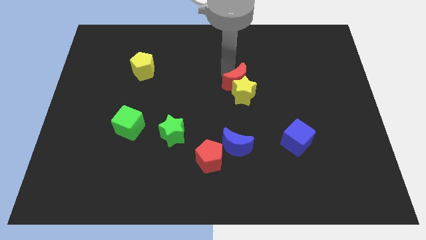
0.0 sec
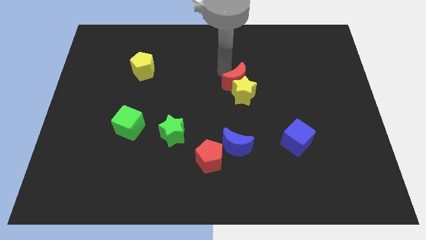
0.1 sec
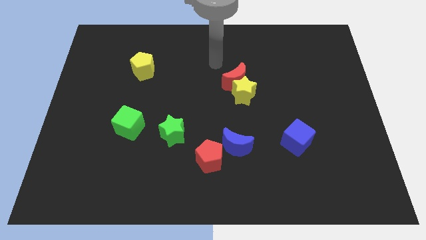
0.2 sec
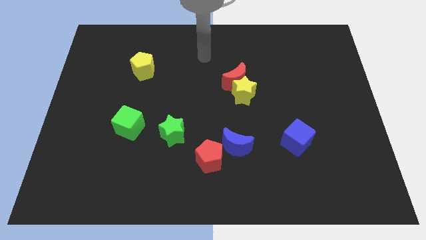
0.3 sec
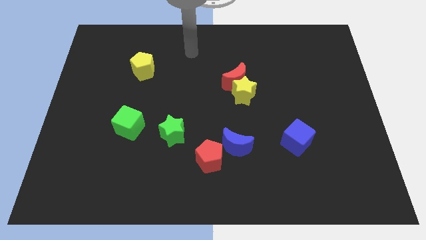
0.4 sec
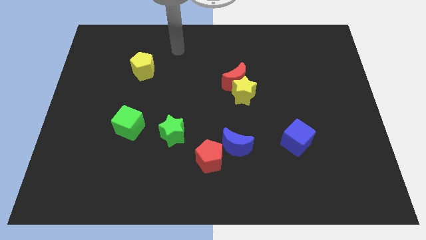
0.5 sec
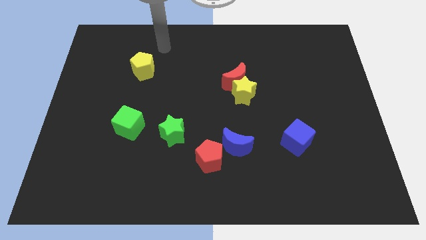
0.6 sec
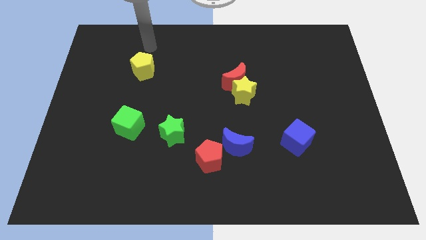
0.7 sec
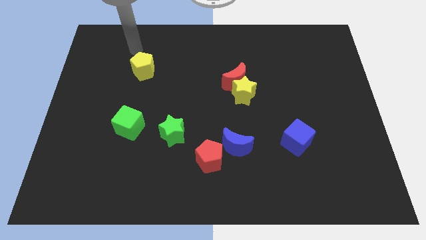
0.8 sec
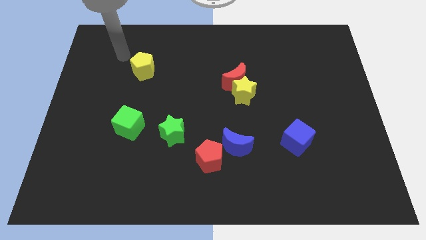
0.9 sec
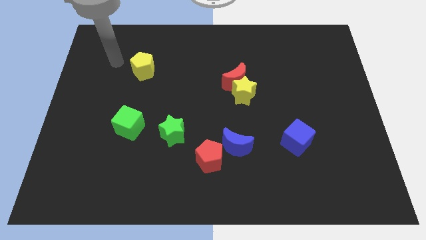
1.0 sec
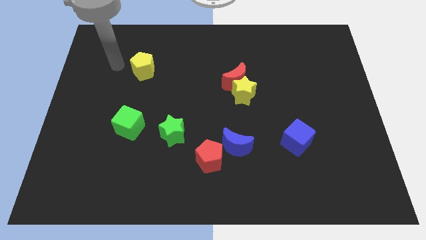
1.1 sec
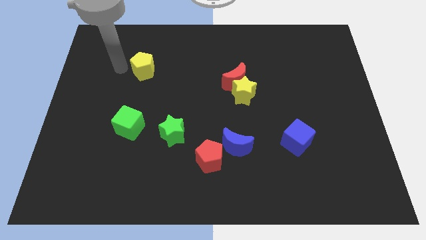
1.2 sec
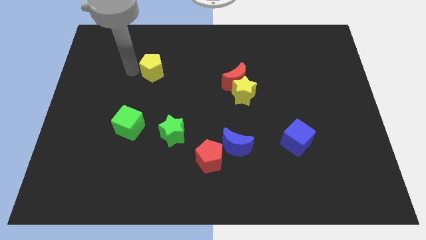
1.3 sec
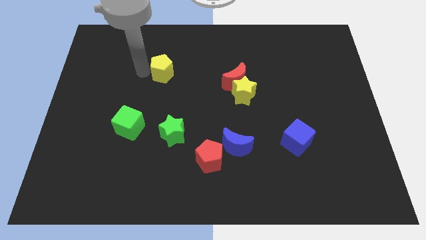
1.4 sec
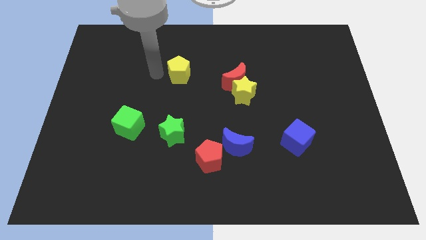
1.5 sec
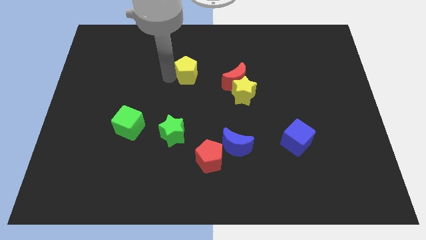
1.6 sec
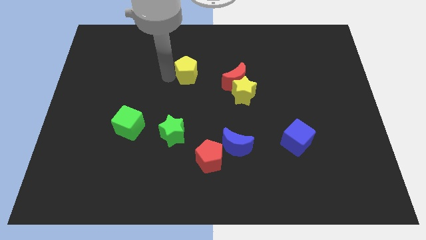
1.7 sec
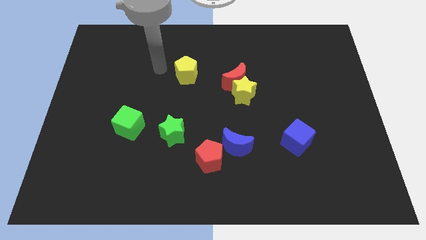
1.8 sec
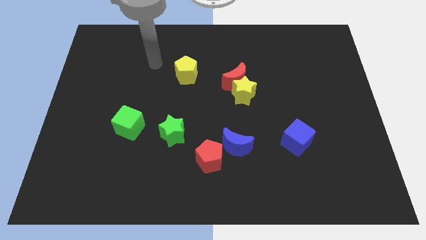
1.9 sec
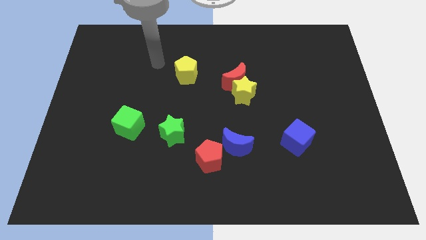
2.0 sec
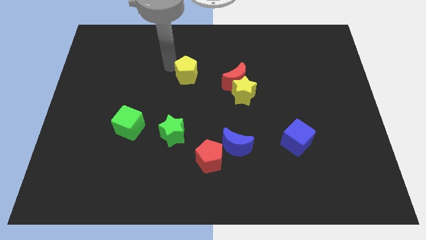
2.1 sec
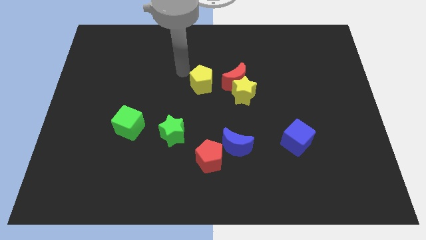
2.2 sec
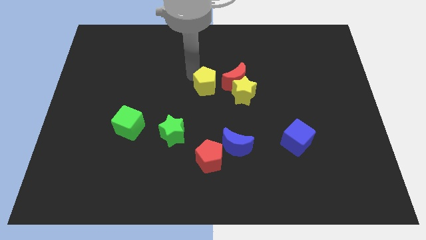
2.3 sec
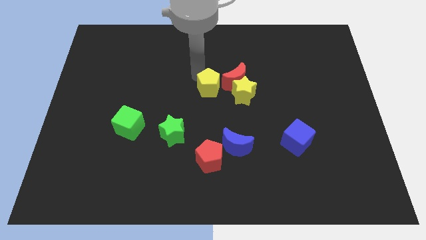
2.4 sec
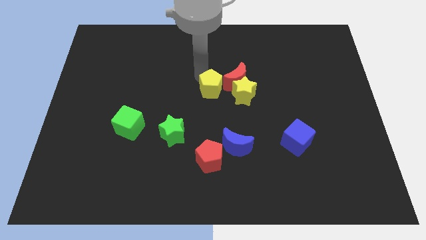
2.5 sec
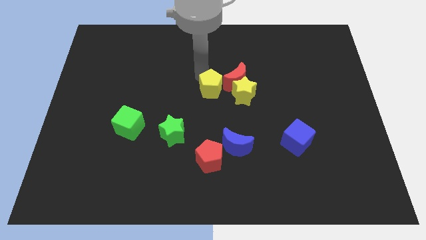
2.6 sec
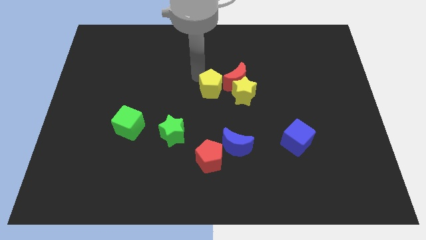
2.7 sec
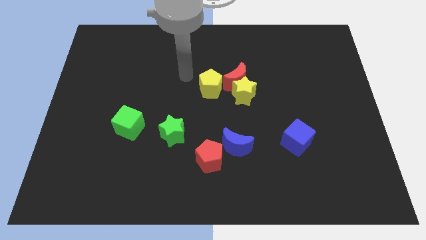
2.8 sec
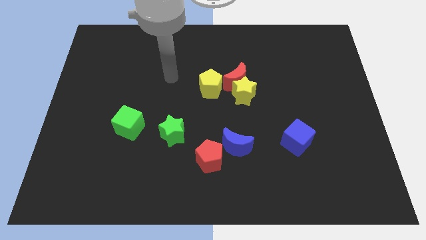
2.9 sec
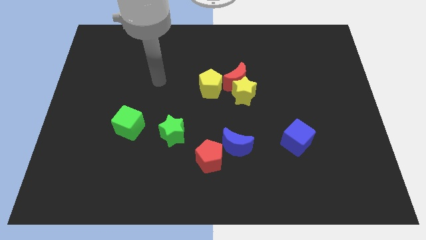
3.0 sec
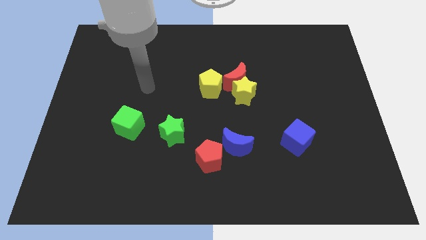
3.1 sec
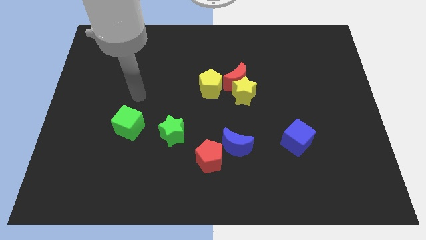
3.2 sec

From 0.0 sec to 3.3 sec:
move the yellow pentagon to the left side of the yellow star

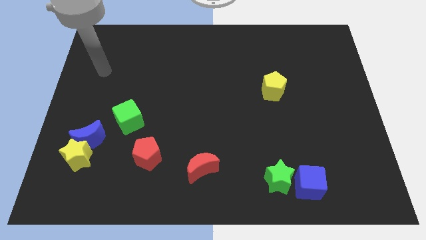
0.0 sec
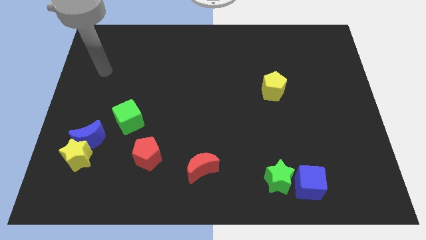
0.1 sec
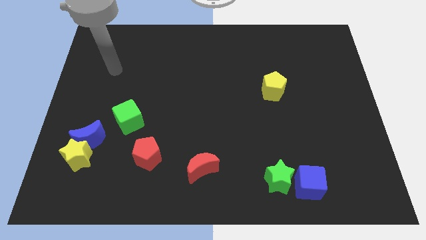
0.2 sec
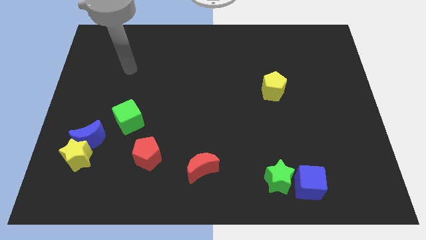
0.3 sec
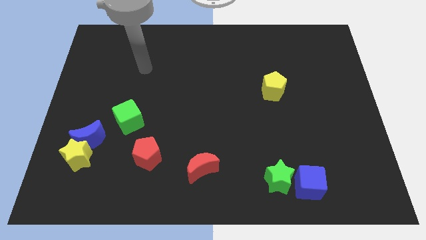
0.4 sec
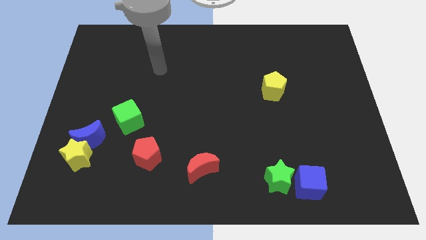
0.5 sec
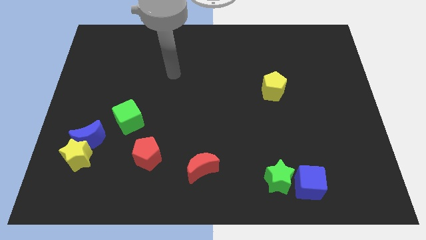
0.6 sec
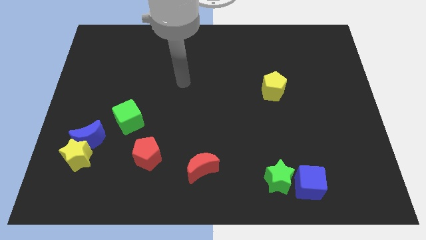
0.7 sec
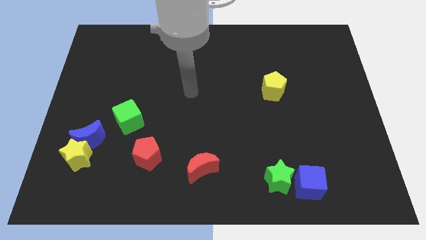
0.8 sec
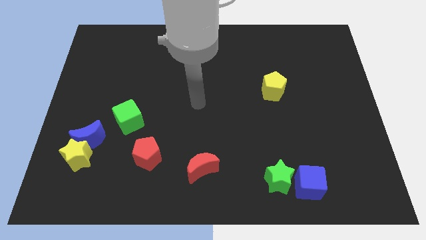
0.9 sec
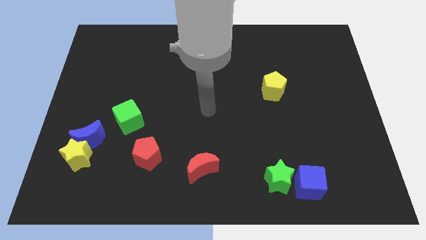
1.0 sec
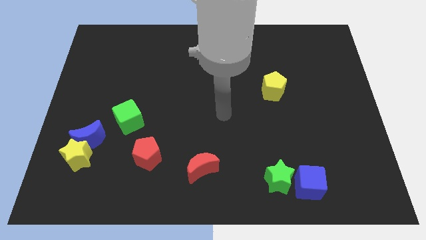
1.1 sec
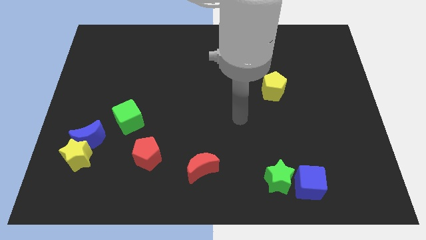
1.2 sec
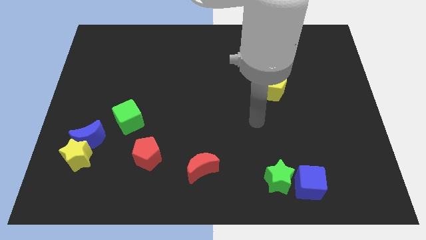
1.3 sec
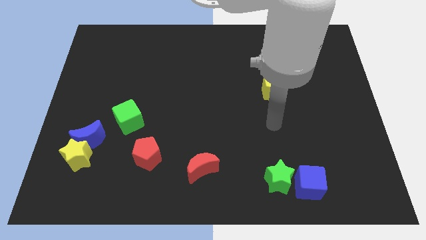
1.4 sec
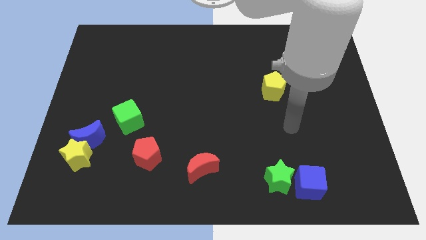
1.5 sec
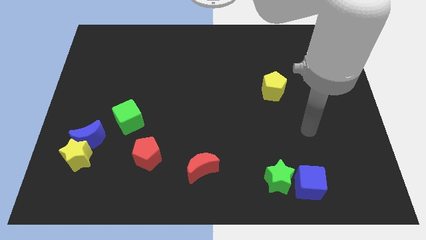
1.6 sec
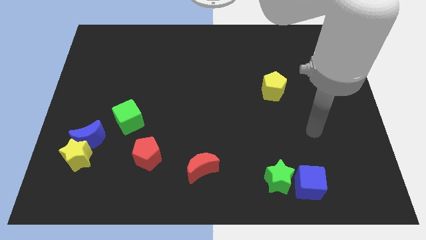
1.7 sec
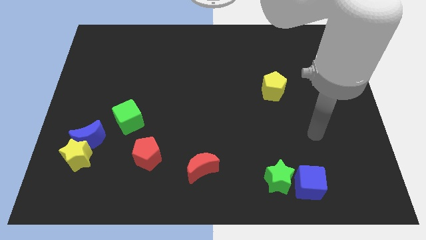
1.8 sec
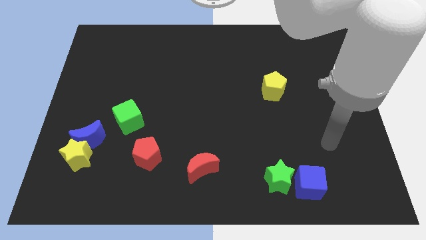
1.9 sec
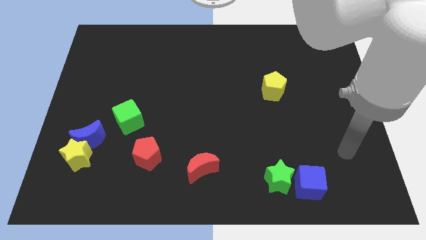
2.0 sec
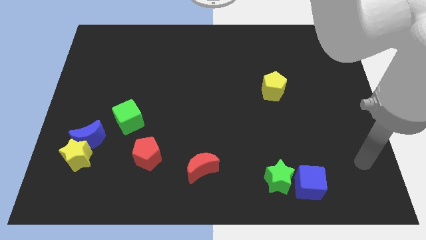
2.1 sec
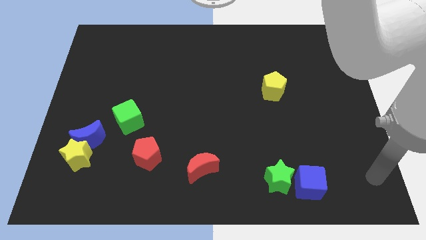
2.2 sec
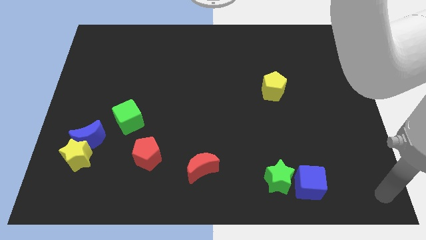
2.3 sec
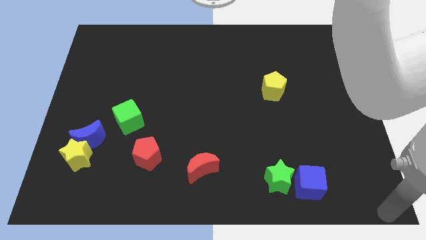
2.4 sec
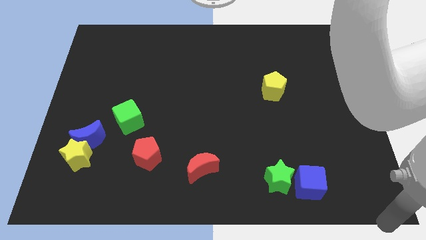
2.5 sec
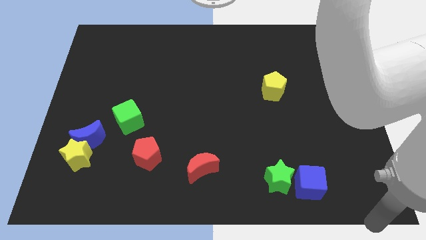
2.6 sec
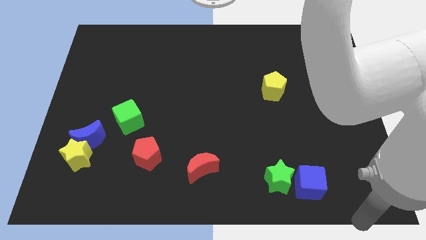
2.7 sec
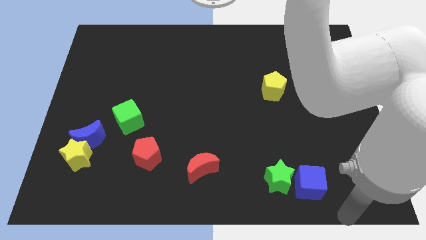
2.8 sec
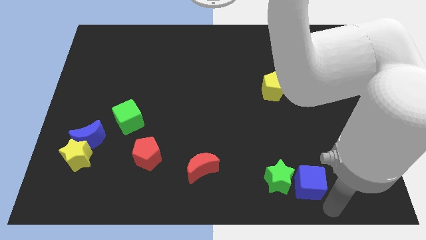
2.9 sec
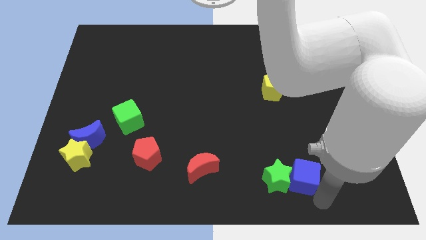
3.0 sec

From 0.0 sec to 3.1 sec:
touch the bottom right side of the blue cube

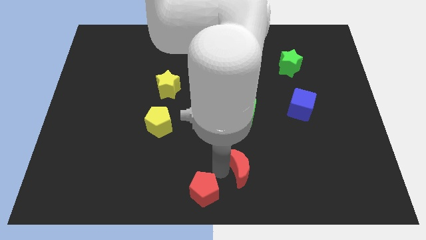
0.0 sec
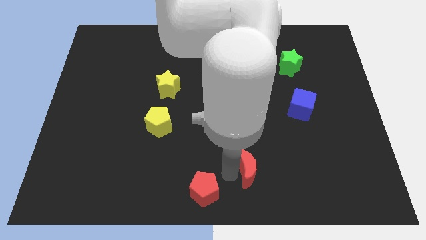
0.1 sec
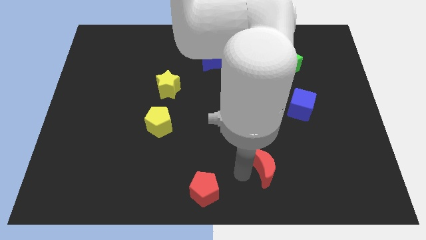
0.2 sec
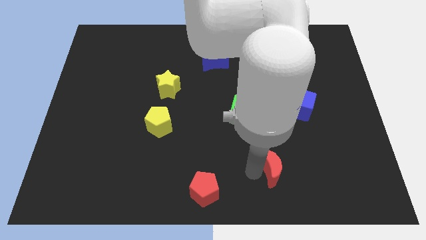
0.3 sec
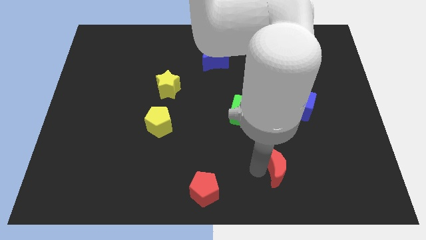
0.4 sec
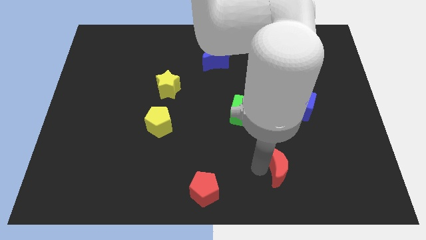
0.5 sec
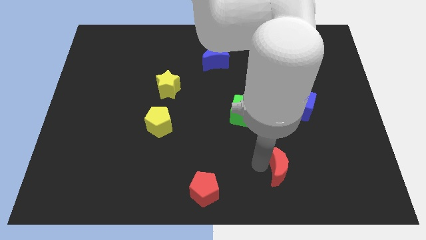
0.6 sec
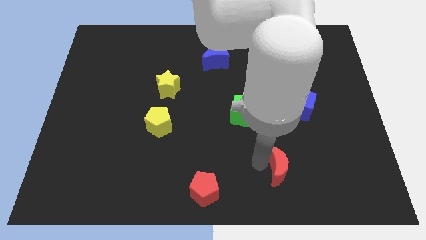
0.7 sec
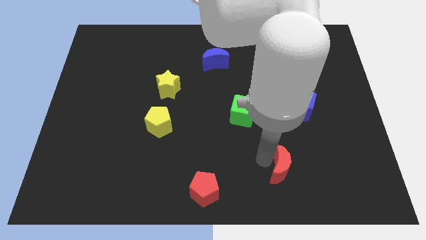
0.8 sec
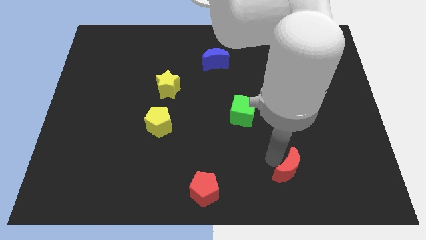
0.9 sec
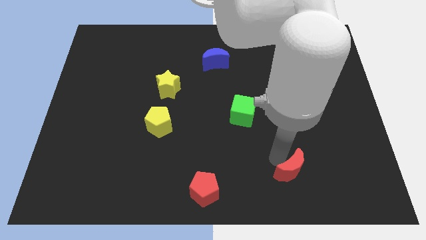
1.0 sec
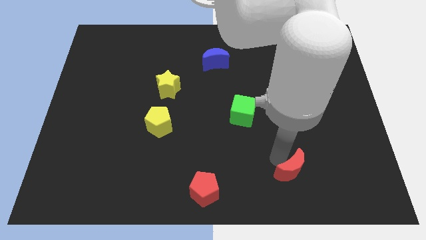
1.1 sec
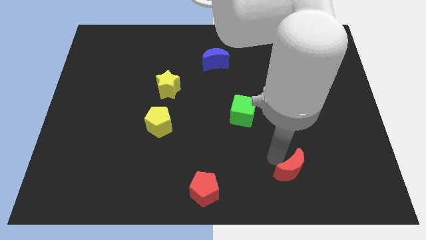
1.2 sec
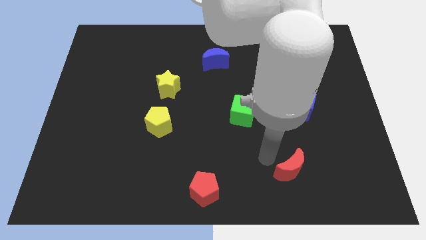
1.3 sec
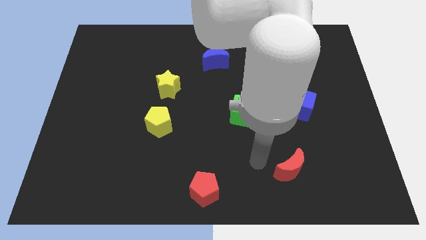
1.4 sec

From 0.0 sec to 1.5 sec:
place red crescent below blue cube

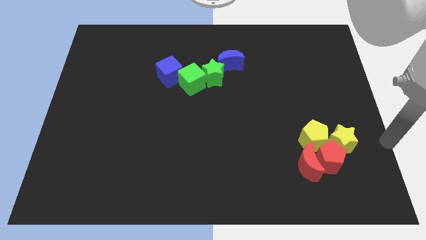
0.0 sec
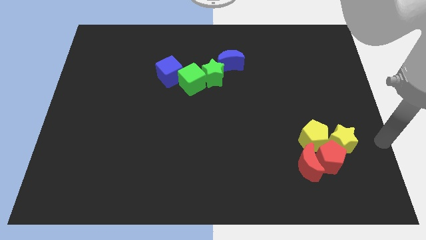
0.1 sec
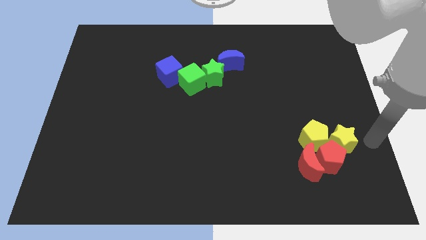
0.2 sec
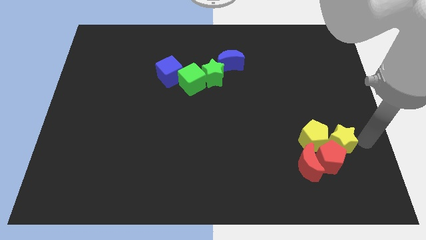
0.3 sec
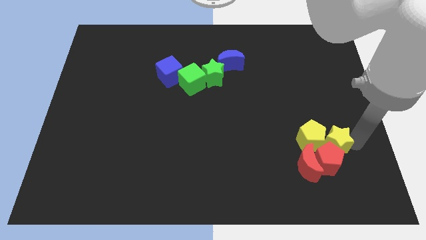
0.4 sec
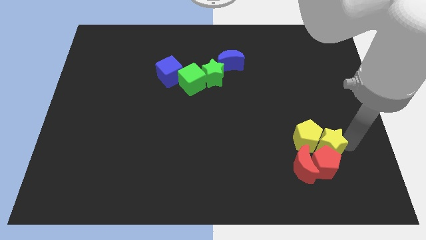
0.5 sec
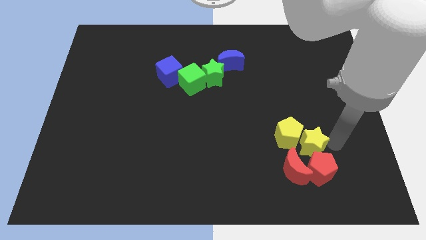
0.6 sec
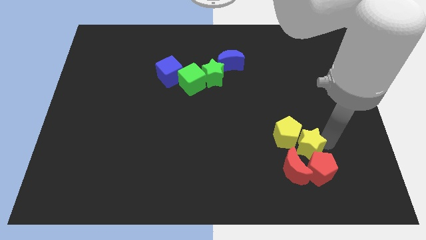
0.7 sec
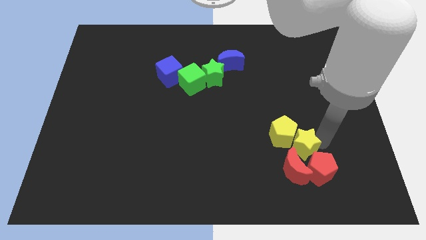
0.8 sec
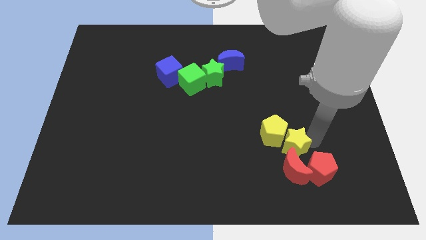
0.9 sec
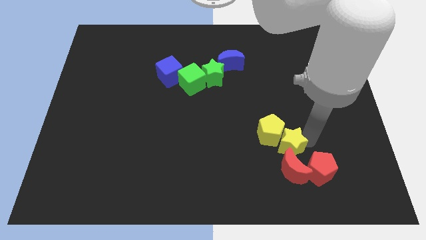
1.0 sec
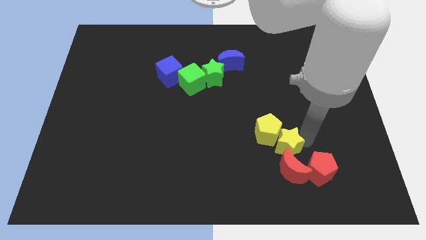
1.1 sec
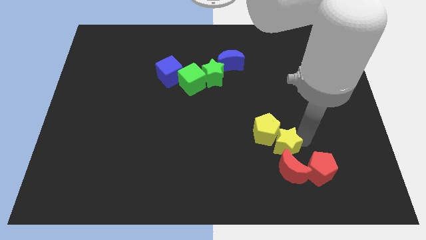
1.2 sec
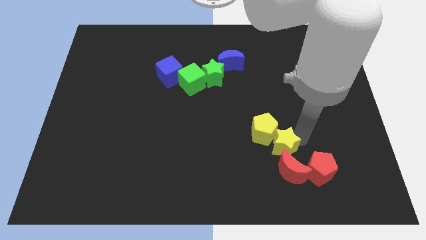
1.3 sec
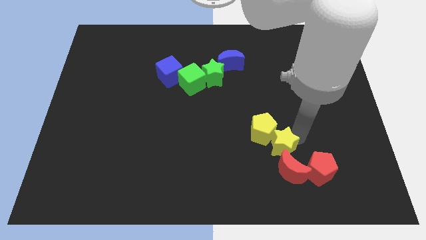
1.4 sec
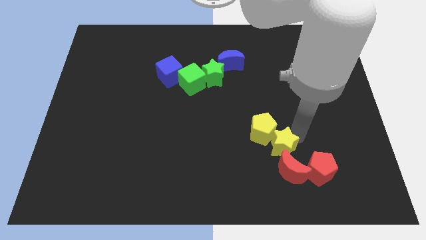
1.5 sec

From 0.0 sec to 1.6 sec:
put the yellow star at the top of the red crescent
